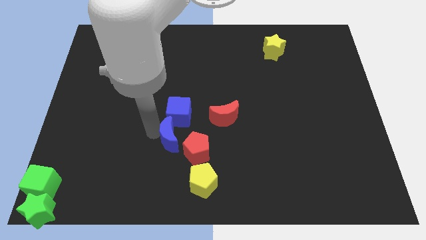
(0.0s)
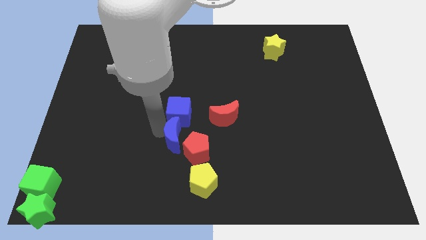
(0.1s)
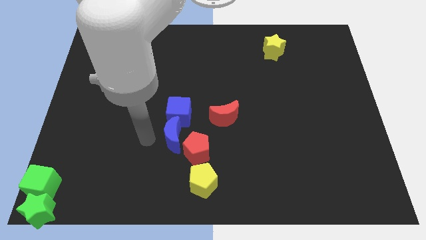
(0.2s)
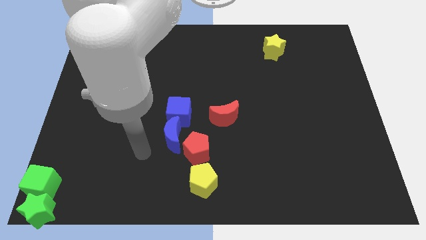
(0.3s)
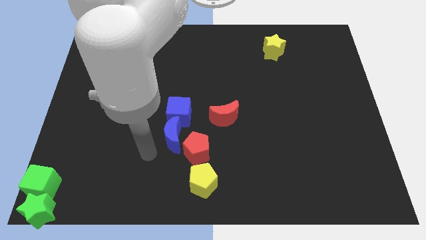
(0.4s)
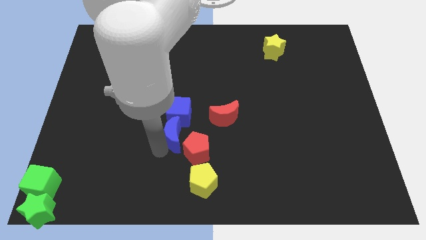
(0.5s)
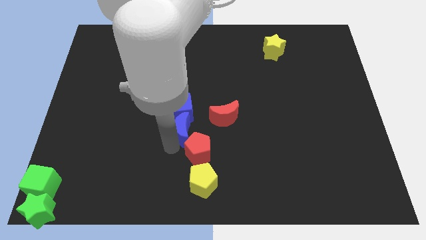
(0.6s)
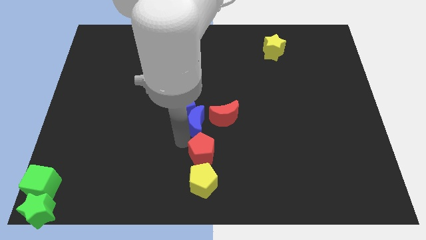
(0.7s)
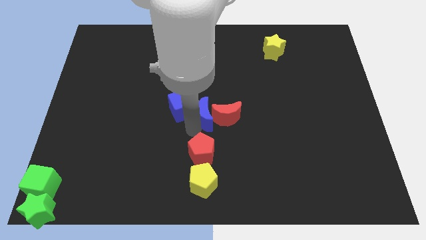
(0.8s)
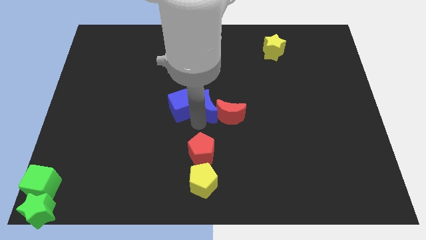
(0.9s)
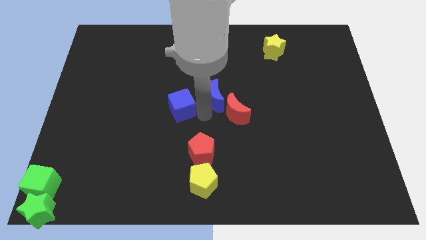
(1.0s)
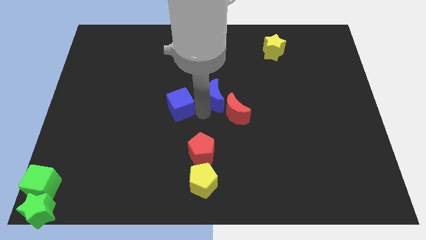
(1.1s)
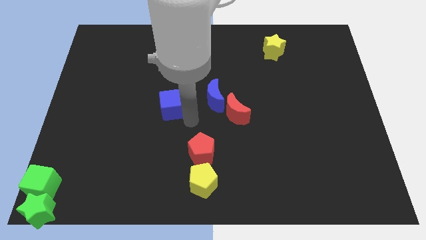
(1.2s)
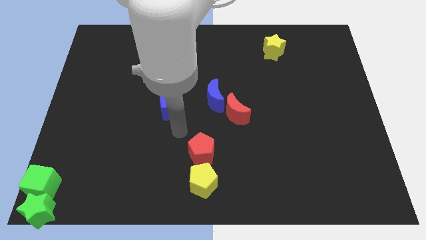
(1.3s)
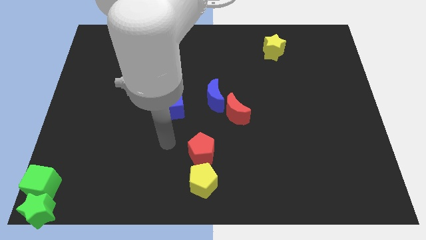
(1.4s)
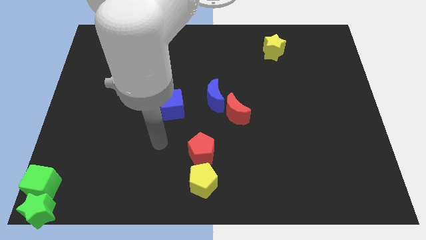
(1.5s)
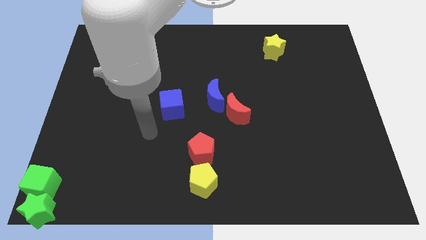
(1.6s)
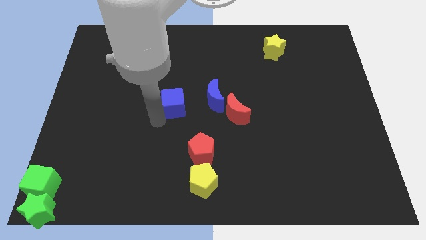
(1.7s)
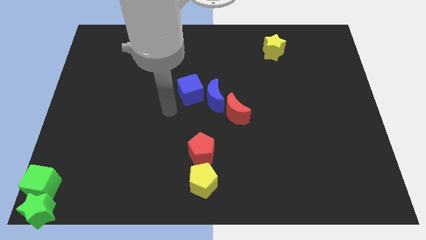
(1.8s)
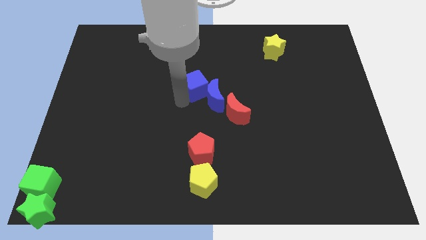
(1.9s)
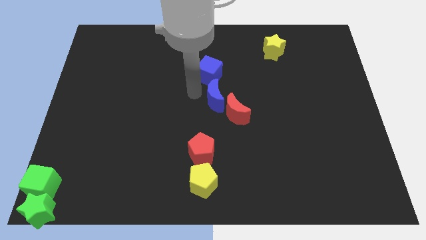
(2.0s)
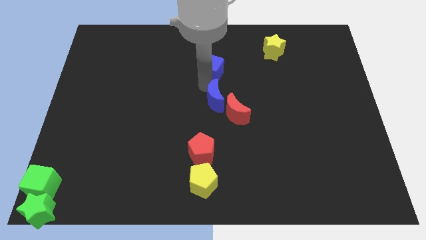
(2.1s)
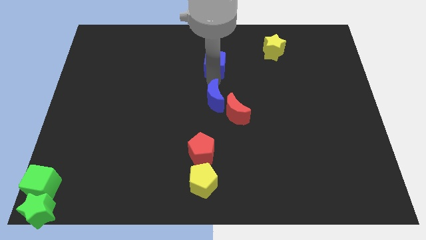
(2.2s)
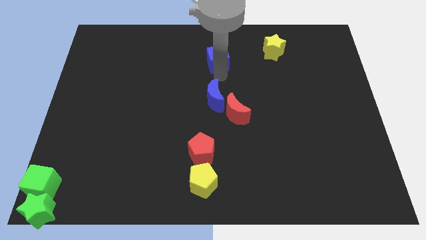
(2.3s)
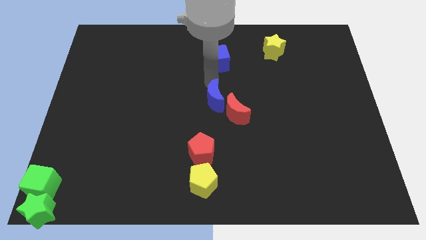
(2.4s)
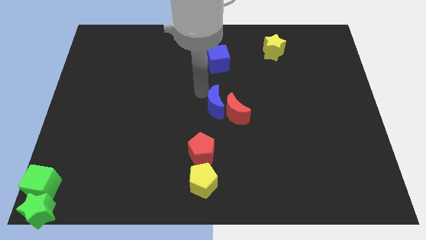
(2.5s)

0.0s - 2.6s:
place blue moon close to red moon

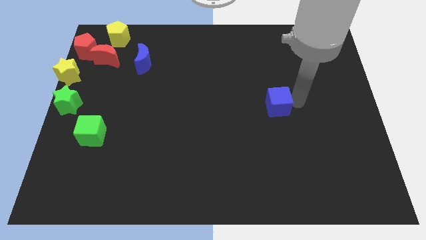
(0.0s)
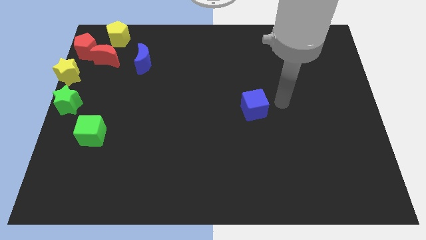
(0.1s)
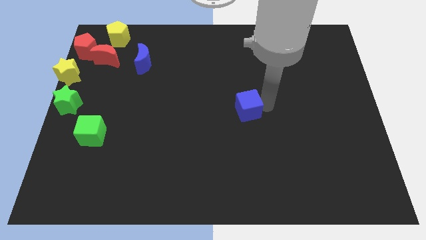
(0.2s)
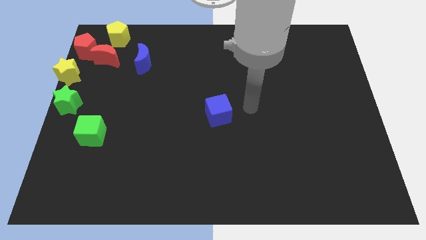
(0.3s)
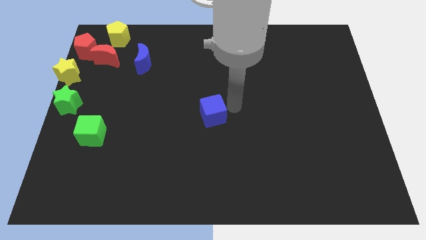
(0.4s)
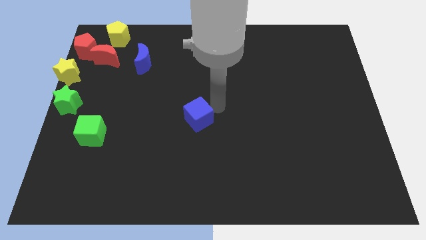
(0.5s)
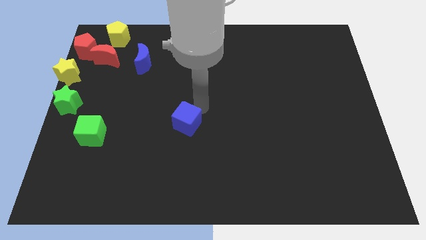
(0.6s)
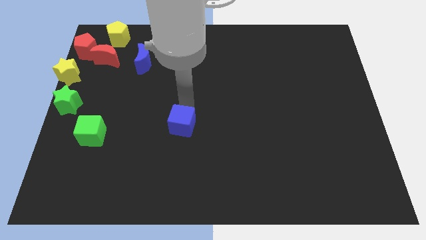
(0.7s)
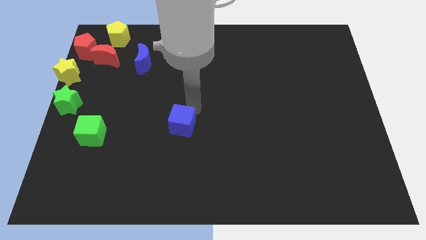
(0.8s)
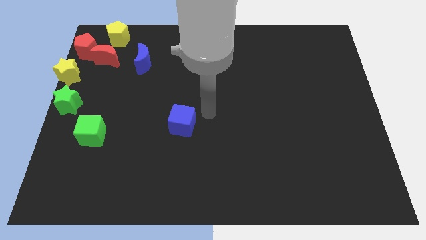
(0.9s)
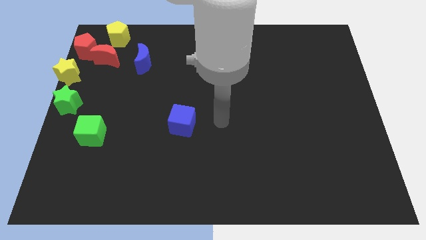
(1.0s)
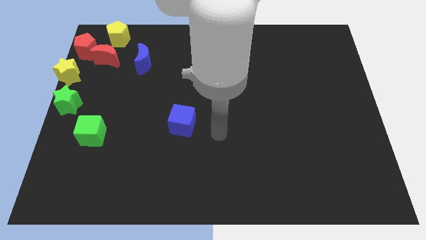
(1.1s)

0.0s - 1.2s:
place the blue cube to the right side of the green cube

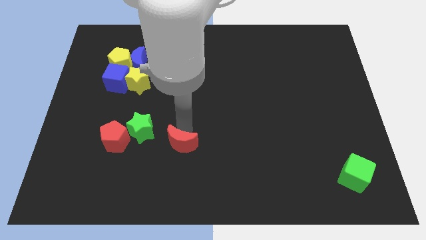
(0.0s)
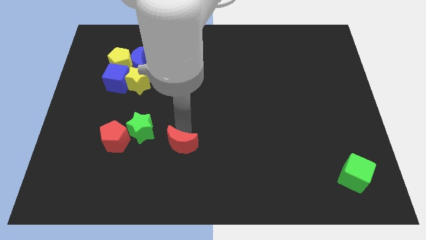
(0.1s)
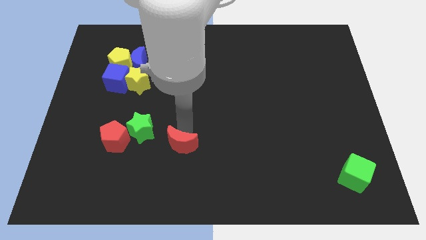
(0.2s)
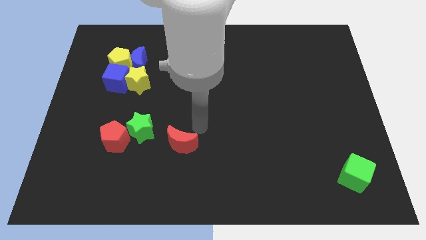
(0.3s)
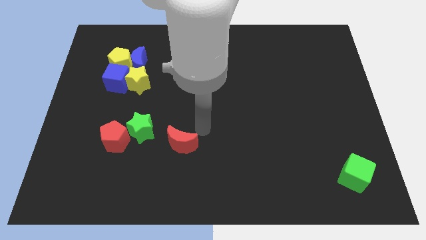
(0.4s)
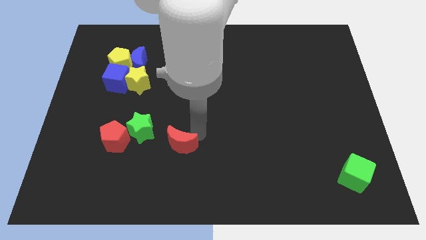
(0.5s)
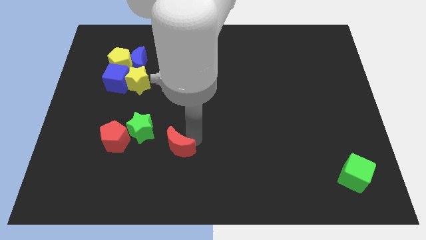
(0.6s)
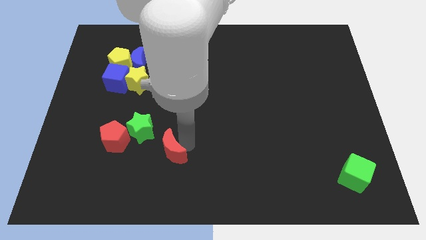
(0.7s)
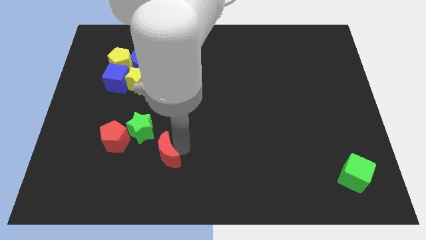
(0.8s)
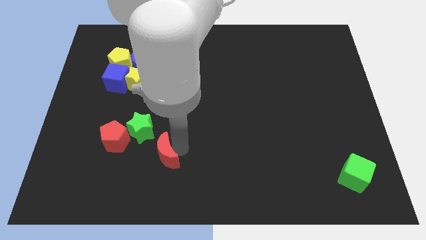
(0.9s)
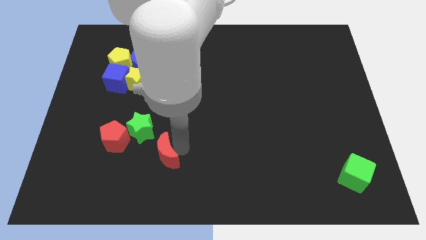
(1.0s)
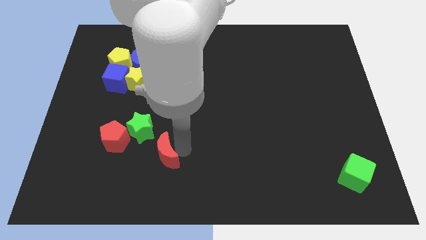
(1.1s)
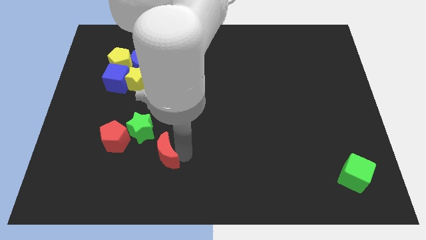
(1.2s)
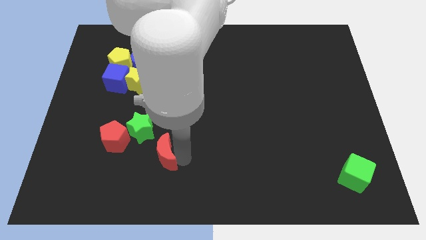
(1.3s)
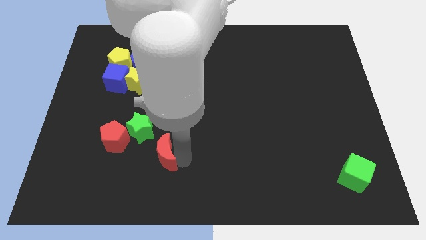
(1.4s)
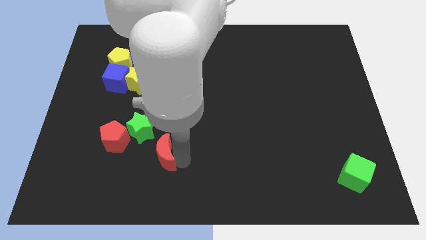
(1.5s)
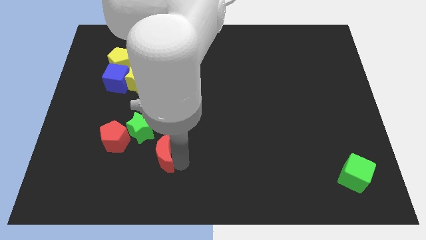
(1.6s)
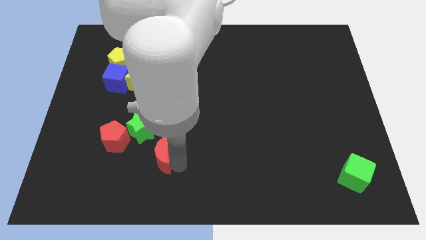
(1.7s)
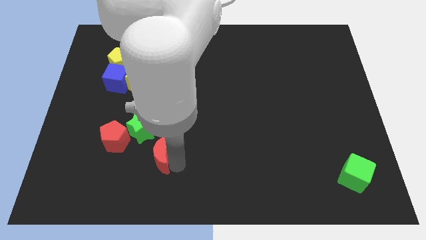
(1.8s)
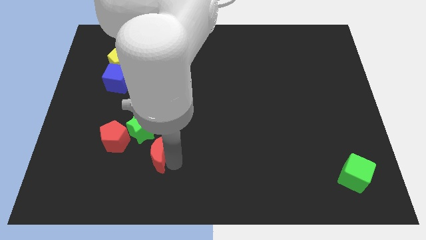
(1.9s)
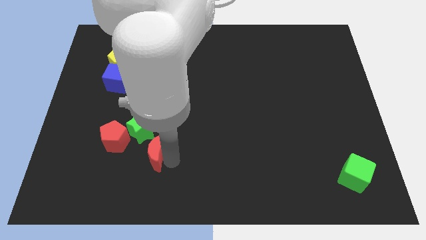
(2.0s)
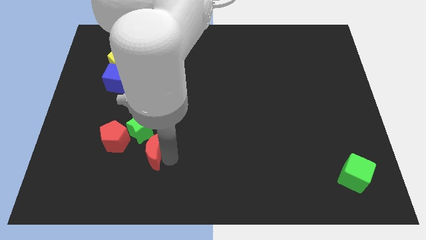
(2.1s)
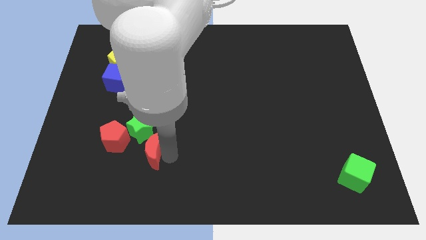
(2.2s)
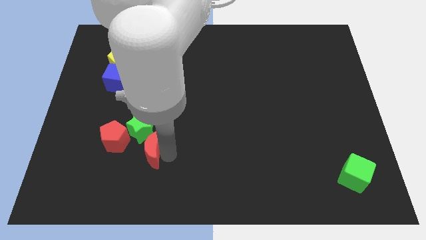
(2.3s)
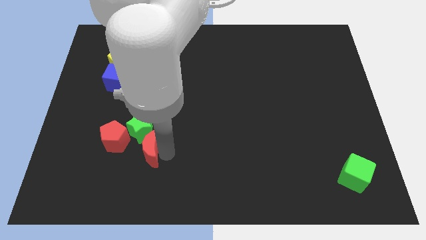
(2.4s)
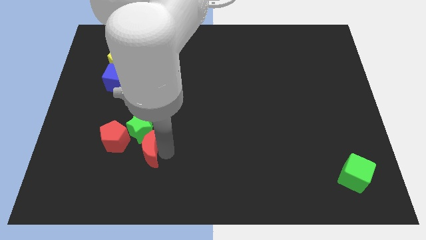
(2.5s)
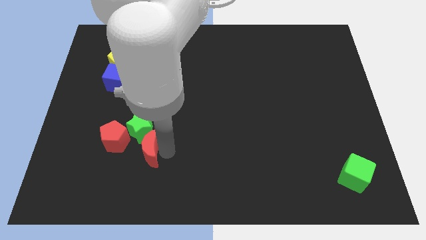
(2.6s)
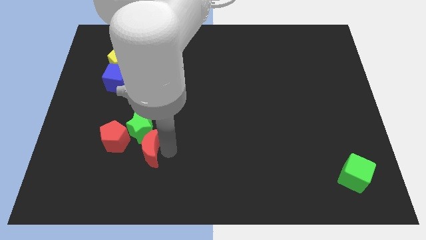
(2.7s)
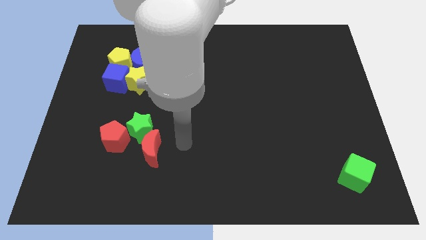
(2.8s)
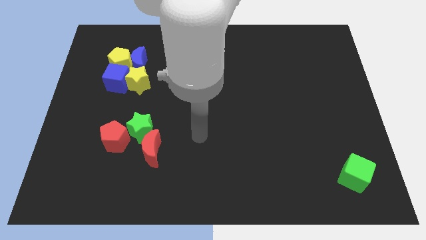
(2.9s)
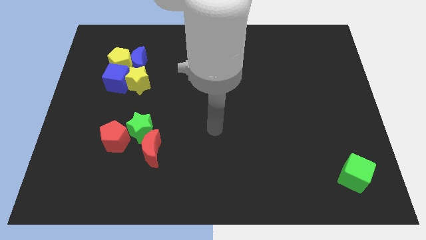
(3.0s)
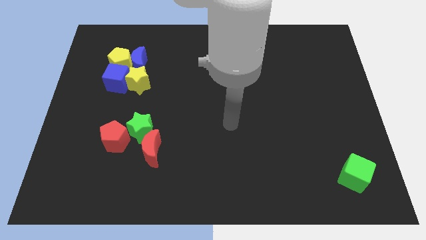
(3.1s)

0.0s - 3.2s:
move red crescent into green star

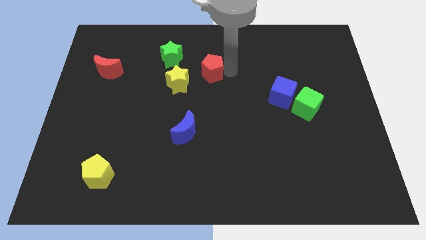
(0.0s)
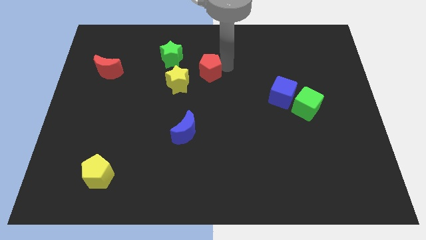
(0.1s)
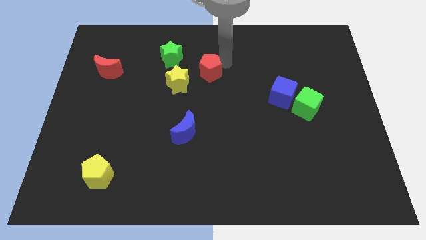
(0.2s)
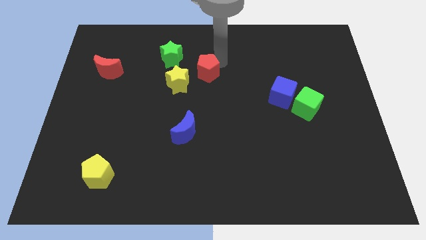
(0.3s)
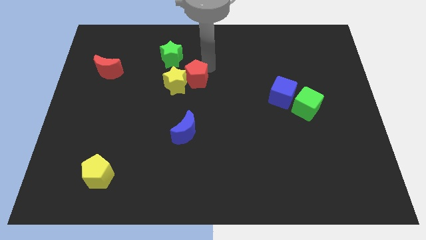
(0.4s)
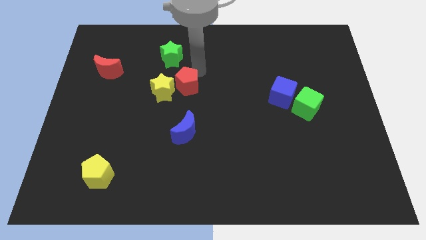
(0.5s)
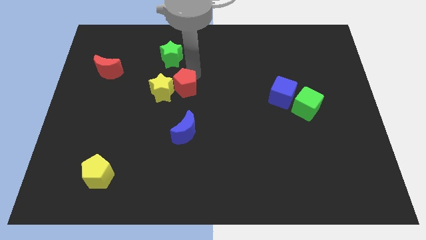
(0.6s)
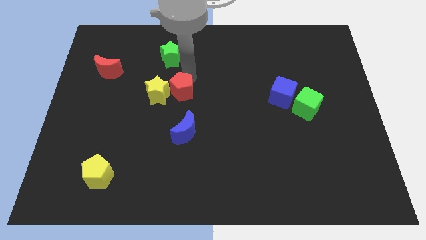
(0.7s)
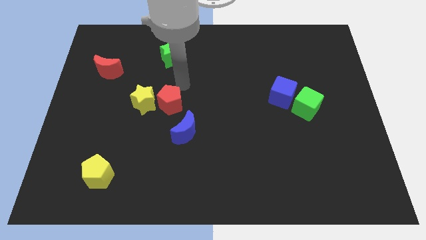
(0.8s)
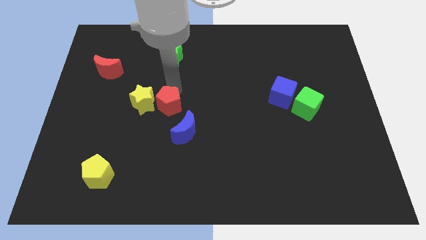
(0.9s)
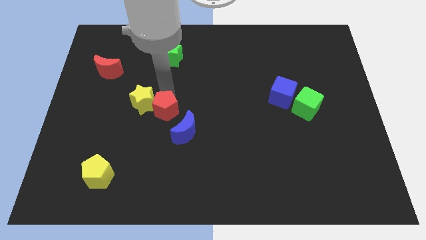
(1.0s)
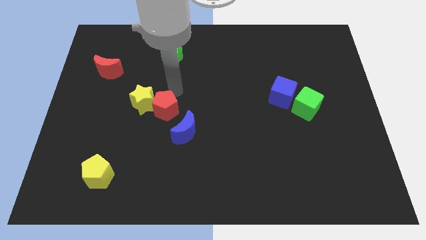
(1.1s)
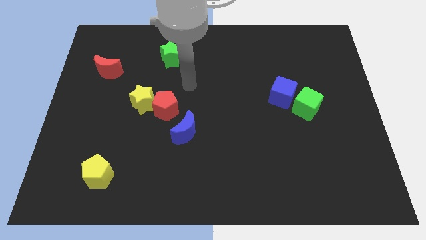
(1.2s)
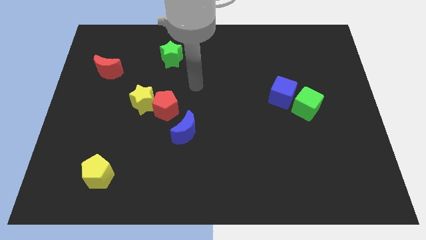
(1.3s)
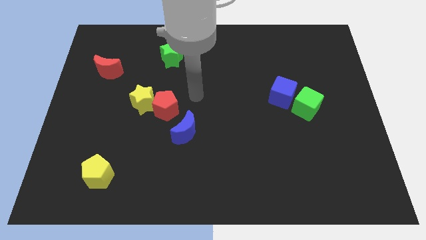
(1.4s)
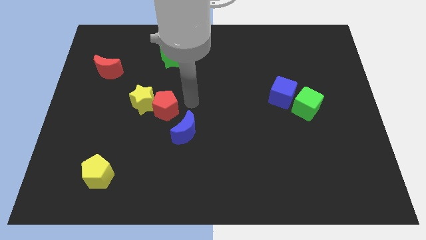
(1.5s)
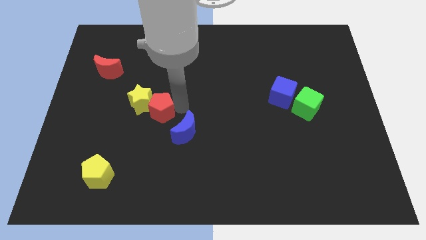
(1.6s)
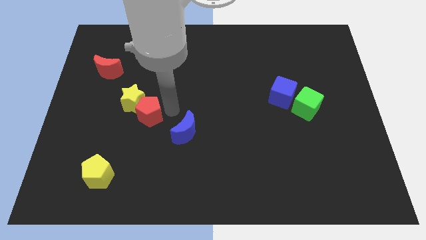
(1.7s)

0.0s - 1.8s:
push the red pentagon and yellow star towards yellow pentagon

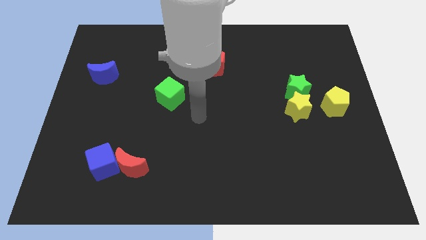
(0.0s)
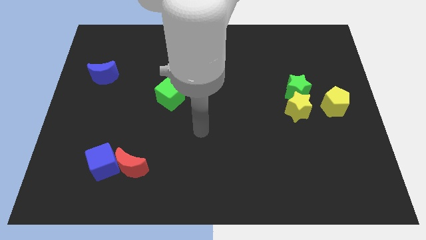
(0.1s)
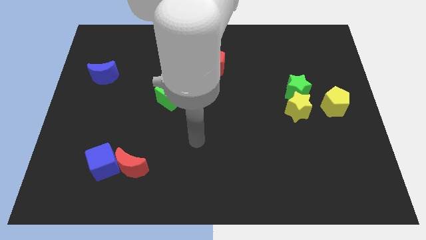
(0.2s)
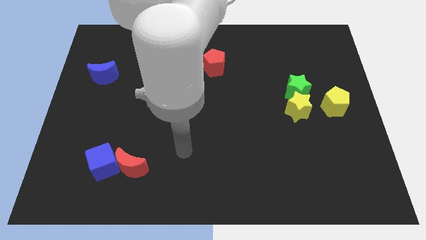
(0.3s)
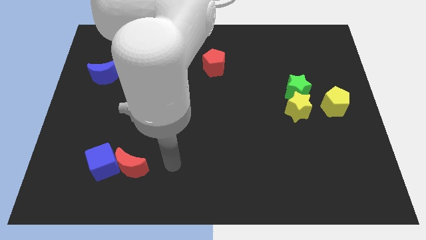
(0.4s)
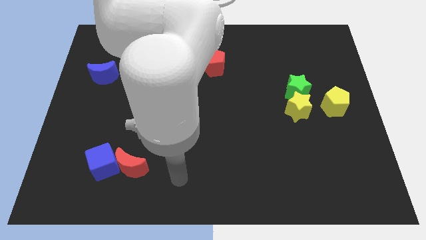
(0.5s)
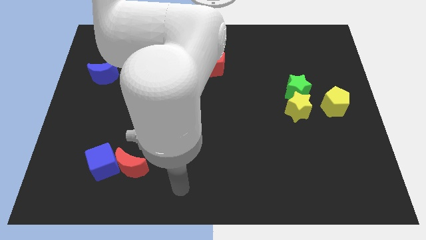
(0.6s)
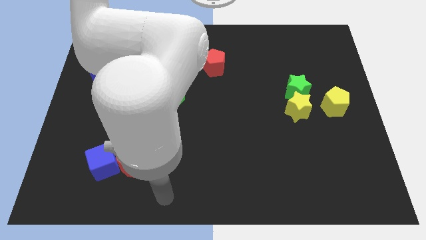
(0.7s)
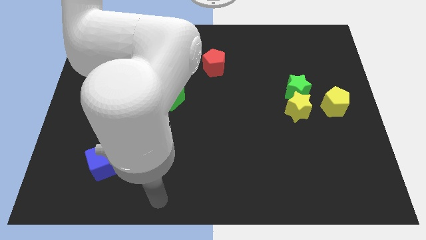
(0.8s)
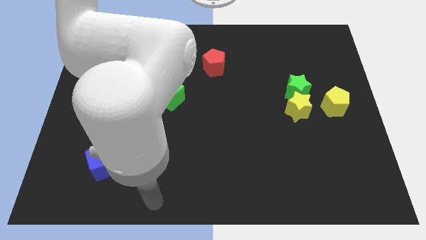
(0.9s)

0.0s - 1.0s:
go away from the green cube
